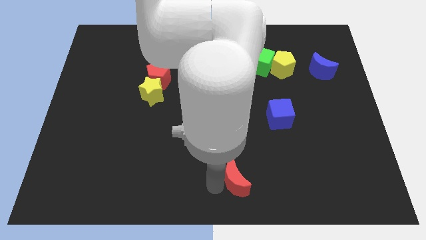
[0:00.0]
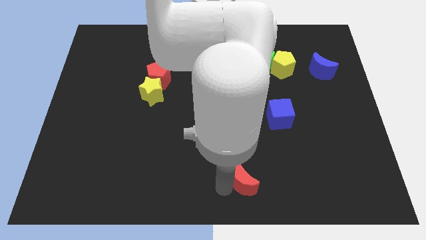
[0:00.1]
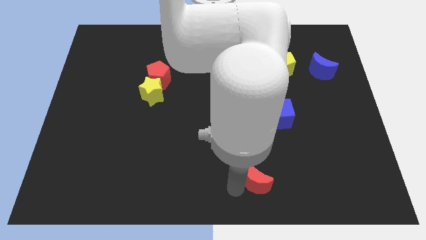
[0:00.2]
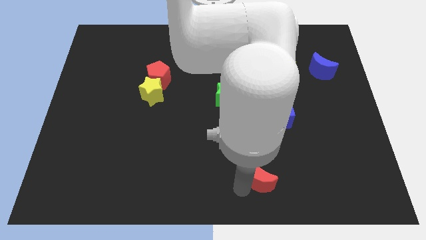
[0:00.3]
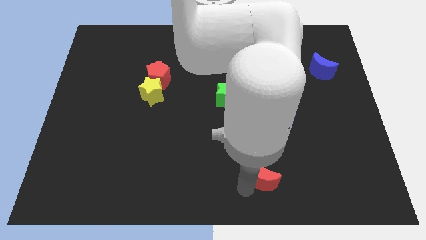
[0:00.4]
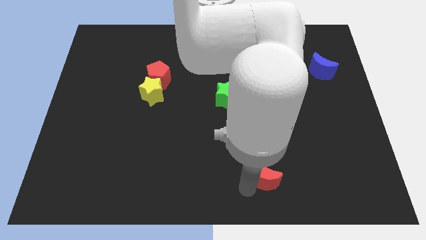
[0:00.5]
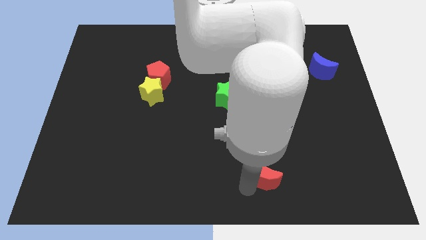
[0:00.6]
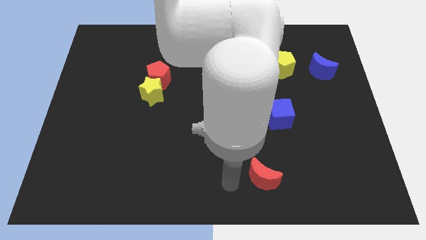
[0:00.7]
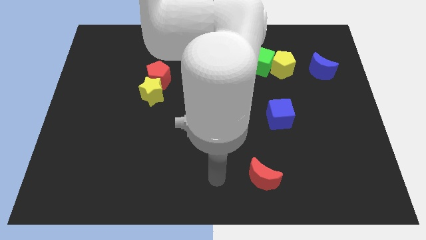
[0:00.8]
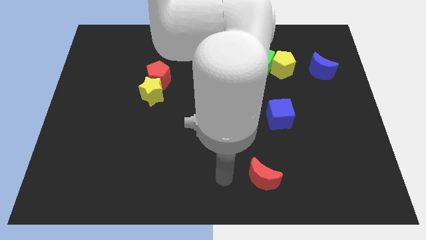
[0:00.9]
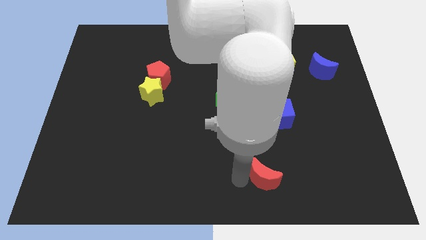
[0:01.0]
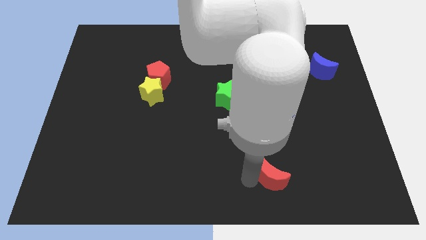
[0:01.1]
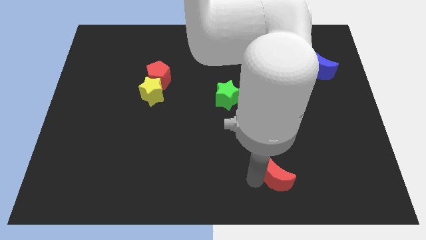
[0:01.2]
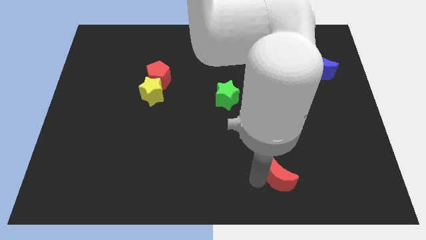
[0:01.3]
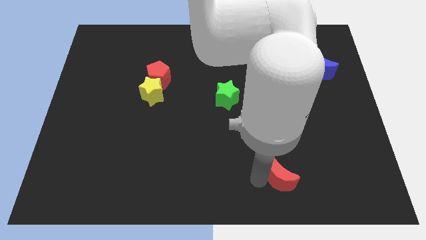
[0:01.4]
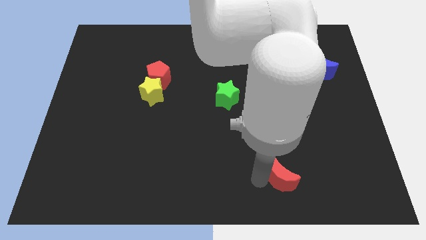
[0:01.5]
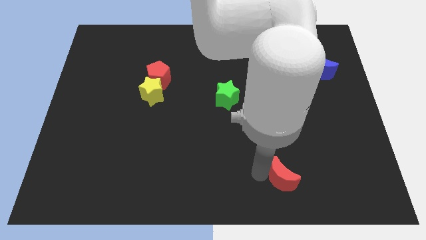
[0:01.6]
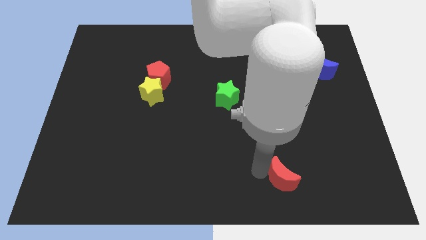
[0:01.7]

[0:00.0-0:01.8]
move the red crescent below the blue cube

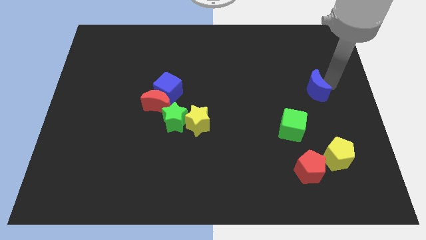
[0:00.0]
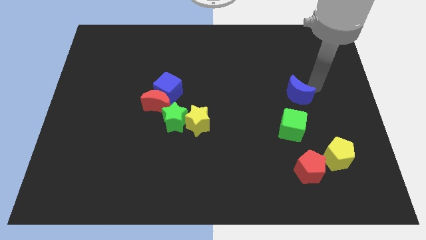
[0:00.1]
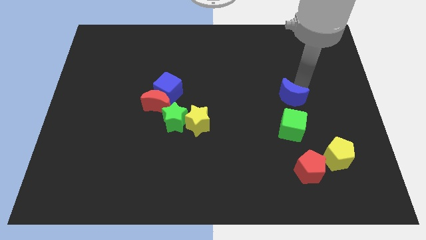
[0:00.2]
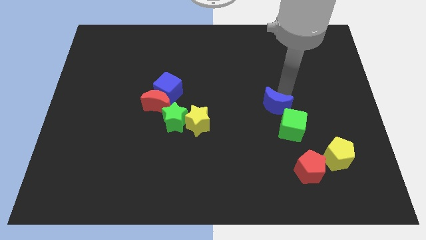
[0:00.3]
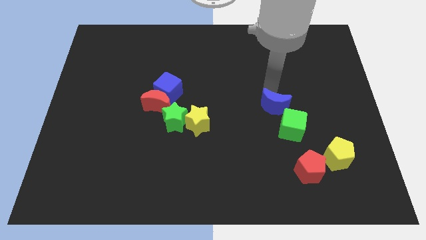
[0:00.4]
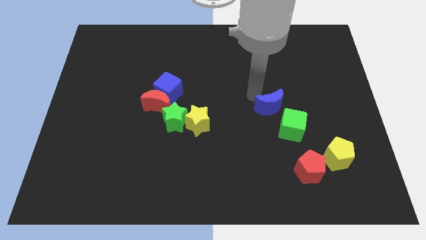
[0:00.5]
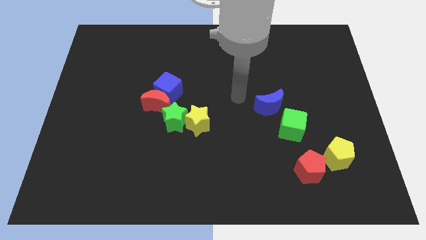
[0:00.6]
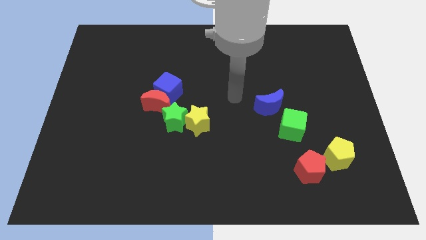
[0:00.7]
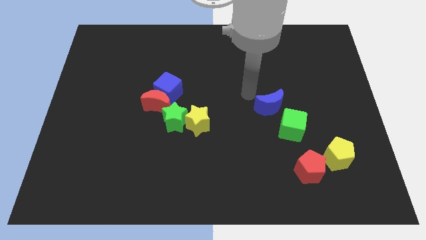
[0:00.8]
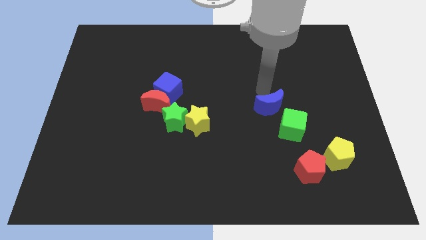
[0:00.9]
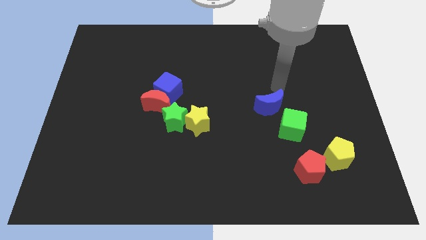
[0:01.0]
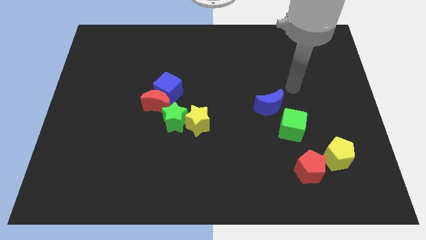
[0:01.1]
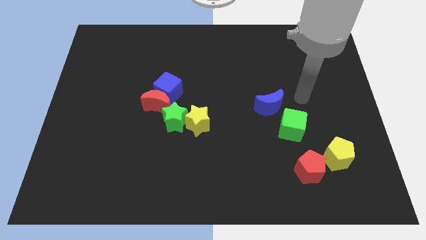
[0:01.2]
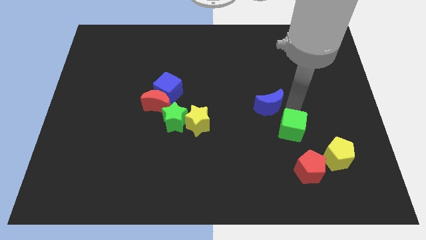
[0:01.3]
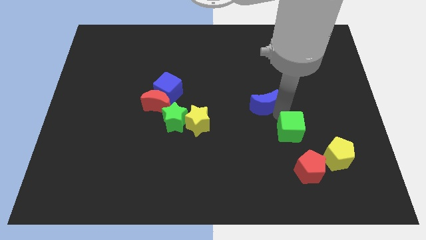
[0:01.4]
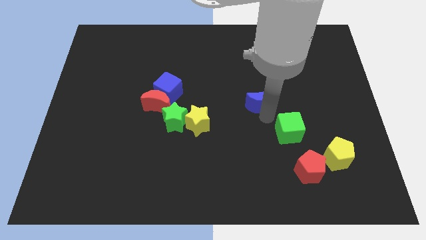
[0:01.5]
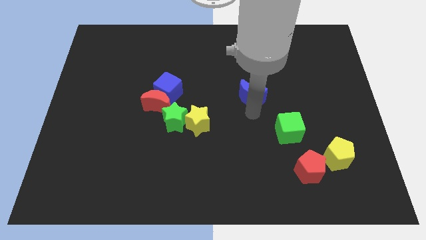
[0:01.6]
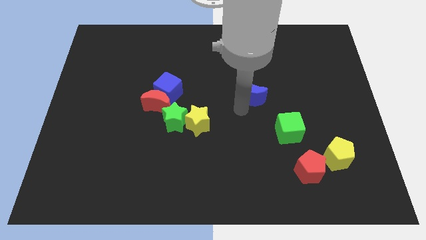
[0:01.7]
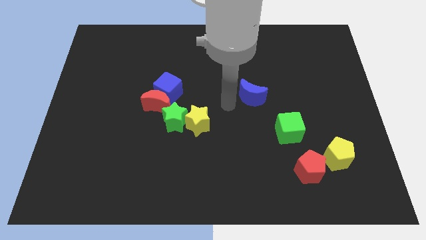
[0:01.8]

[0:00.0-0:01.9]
put the blue crescent diagonally above the top left side of the green cube

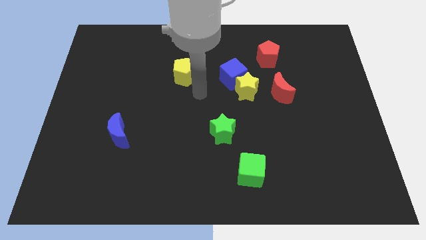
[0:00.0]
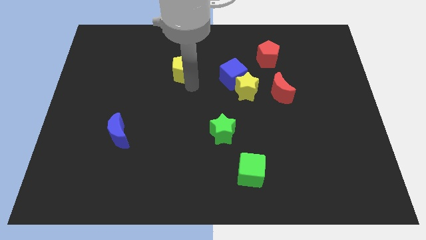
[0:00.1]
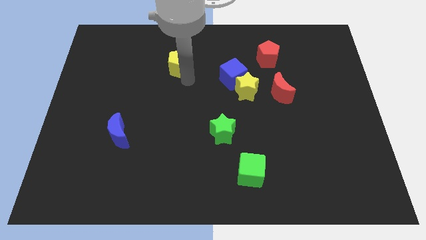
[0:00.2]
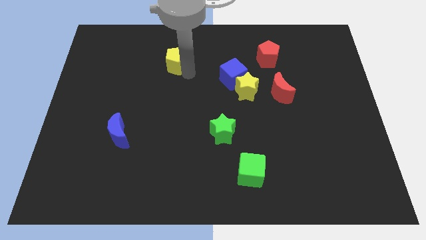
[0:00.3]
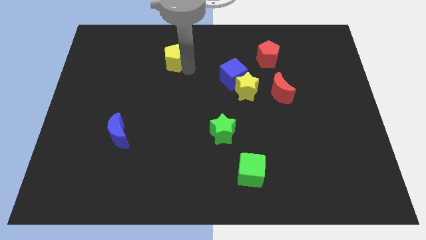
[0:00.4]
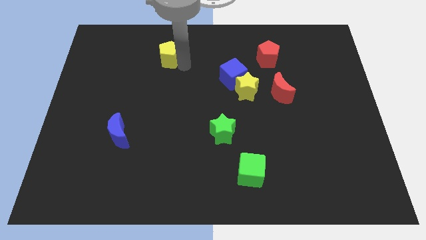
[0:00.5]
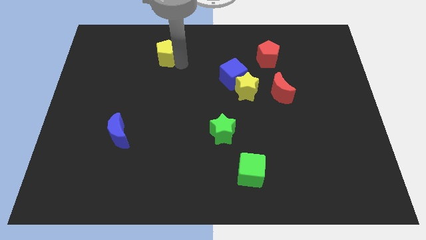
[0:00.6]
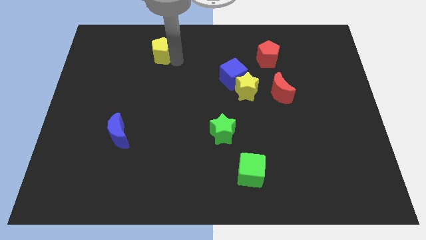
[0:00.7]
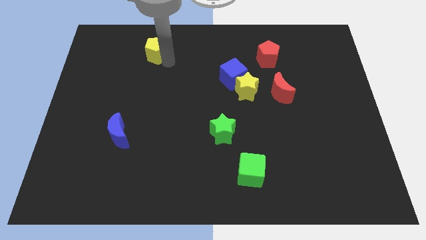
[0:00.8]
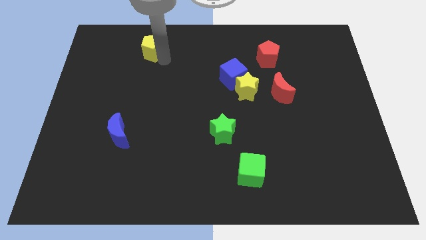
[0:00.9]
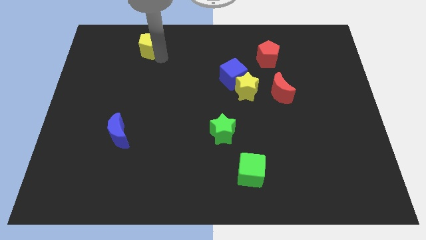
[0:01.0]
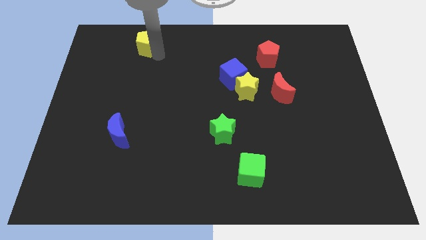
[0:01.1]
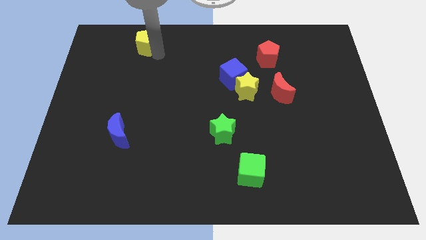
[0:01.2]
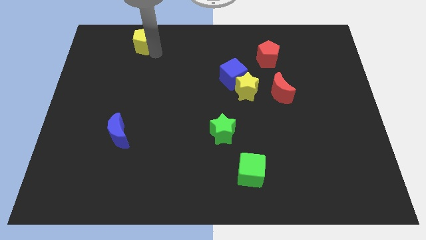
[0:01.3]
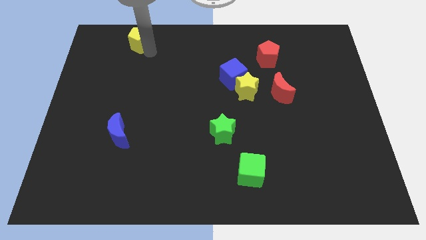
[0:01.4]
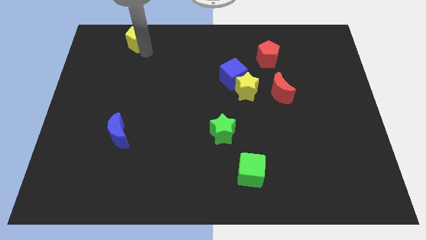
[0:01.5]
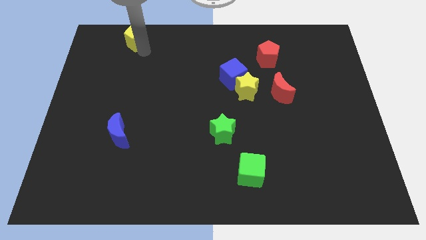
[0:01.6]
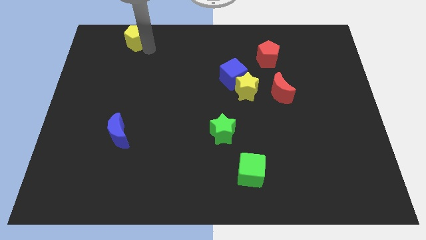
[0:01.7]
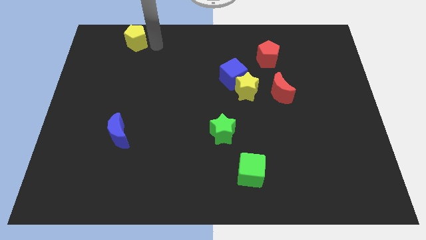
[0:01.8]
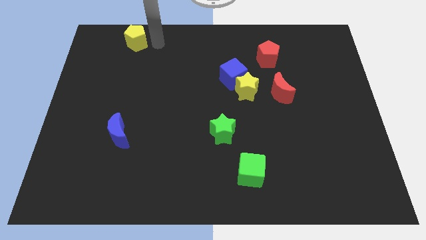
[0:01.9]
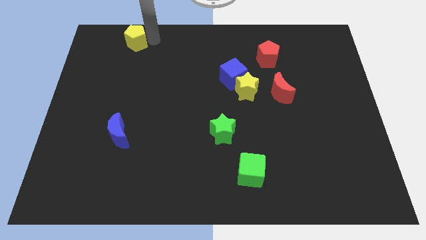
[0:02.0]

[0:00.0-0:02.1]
move yellow pentagon towards top left

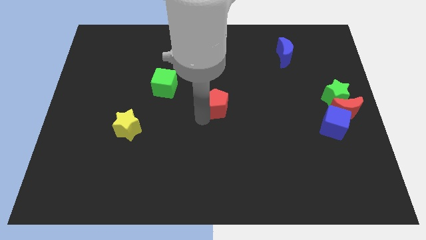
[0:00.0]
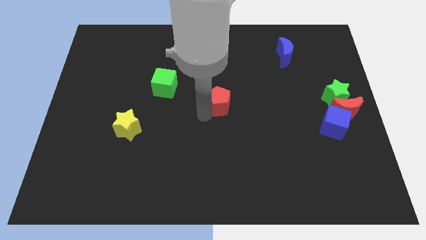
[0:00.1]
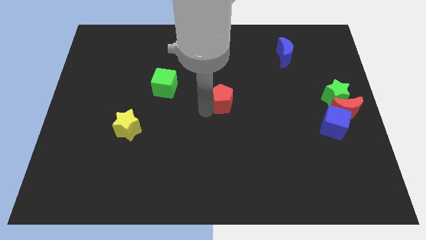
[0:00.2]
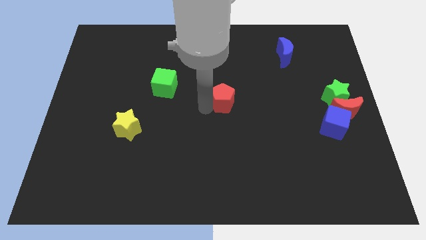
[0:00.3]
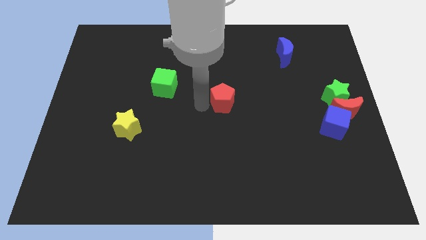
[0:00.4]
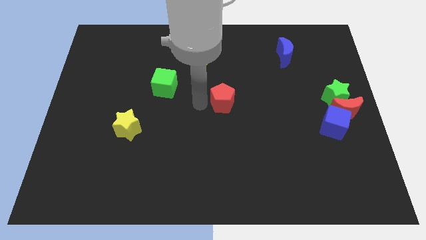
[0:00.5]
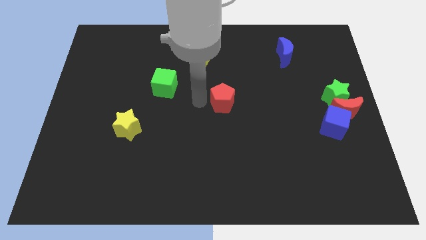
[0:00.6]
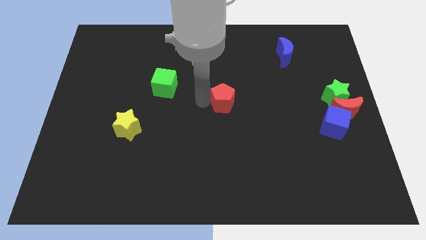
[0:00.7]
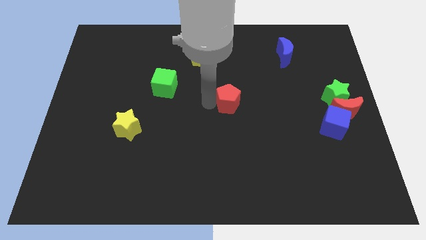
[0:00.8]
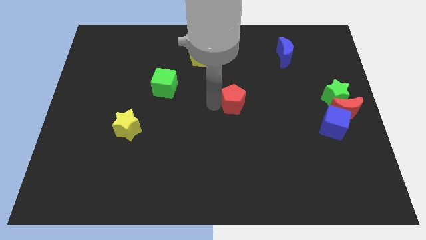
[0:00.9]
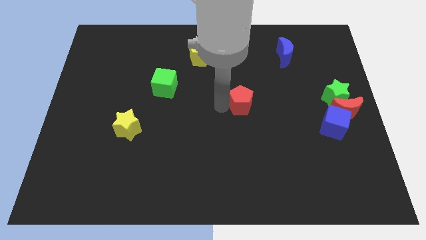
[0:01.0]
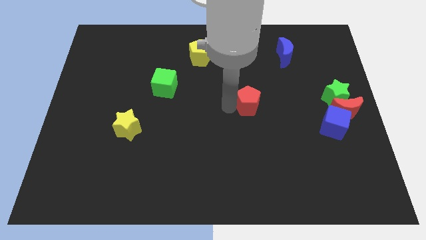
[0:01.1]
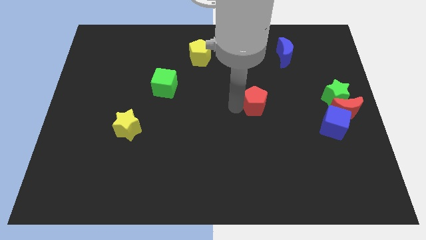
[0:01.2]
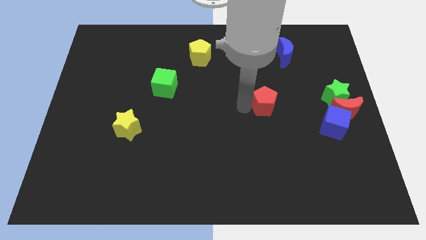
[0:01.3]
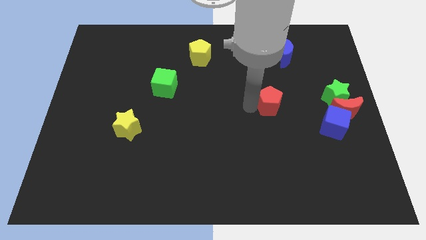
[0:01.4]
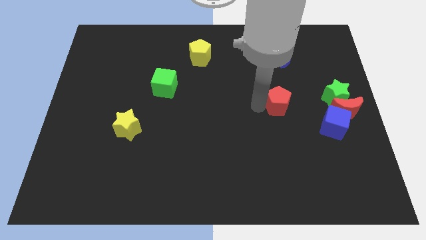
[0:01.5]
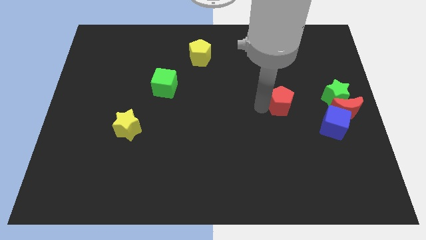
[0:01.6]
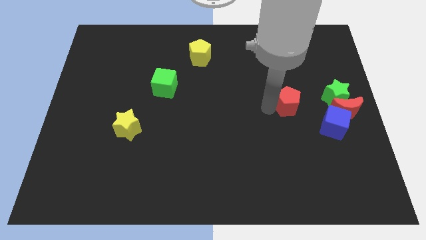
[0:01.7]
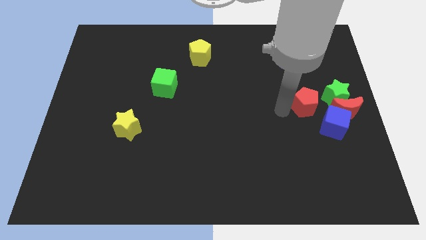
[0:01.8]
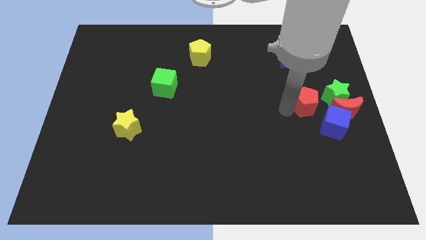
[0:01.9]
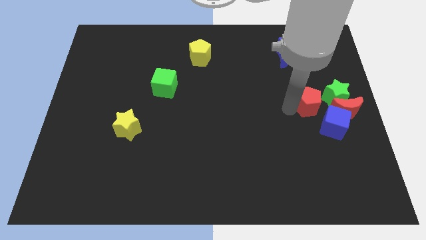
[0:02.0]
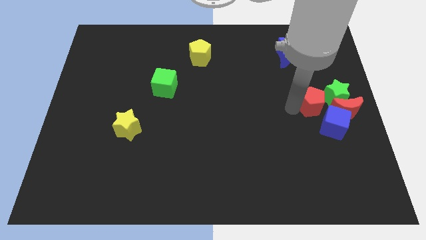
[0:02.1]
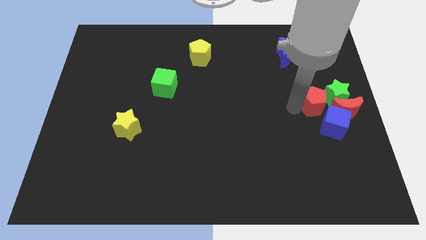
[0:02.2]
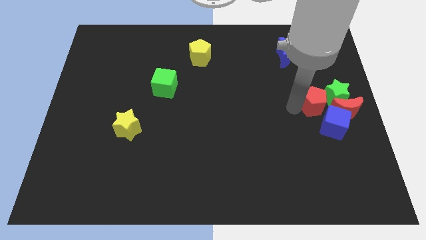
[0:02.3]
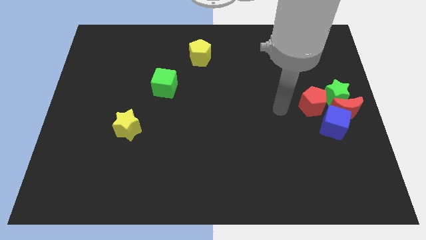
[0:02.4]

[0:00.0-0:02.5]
push the red pentagon into the the green star

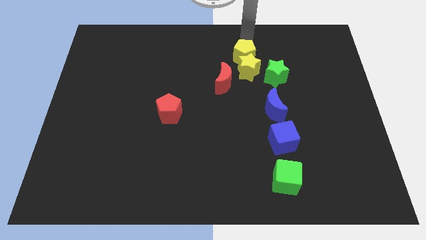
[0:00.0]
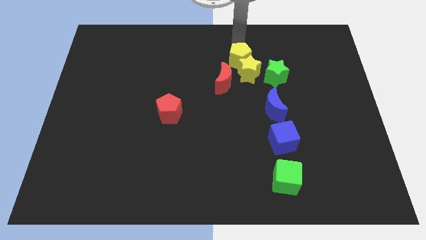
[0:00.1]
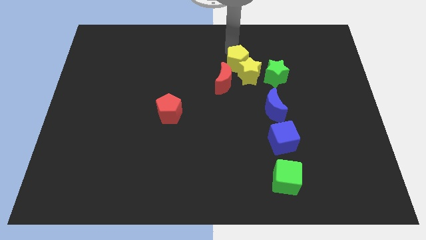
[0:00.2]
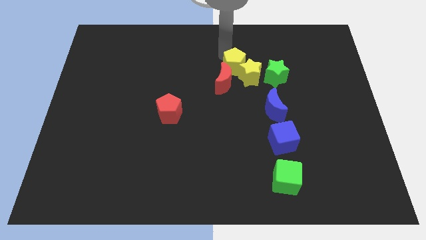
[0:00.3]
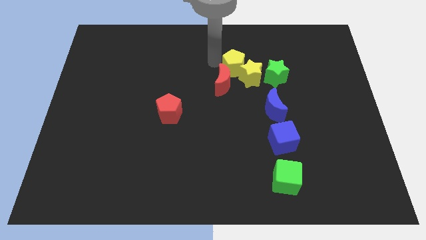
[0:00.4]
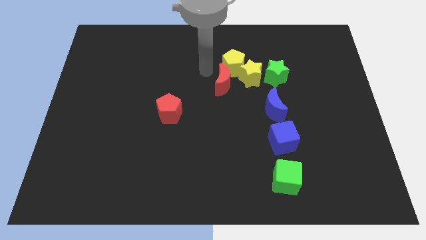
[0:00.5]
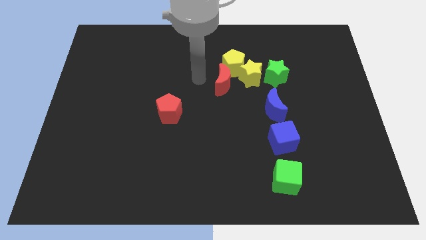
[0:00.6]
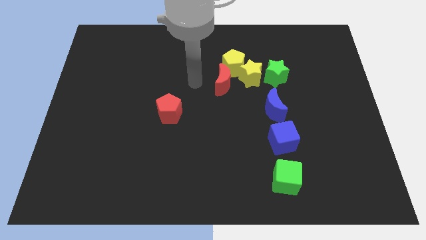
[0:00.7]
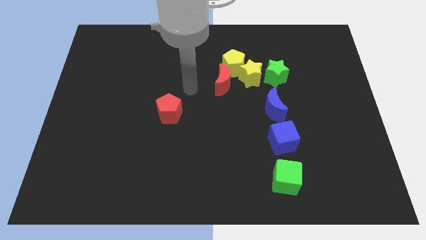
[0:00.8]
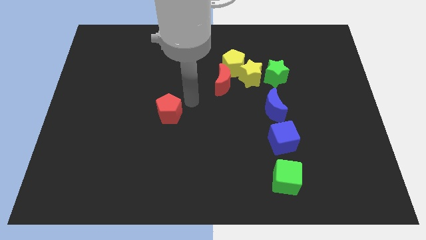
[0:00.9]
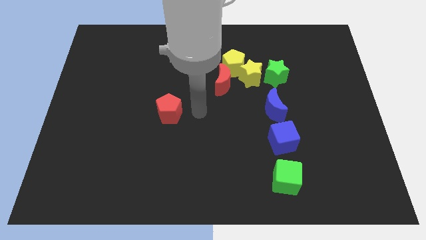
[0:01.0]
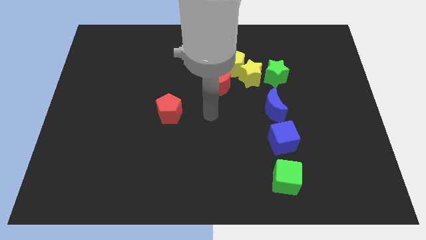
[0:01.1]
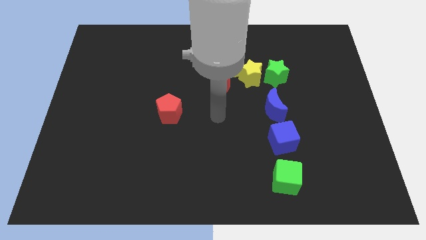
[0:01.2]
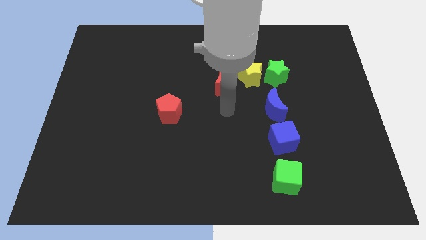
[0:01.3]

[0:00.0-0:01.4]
put your arm underneath the red crescent
